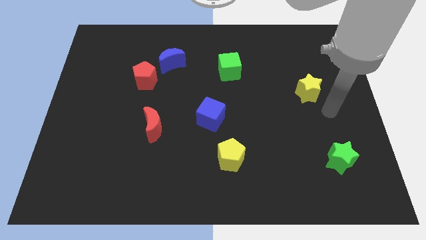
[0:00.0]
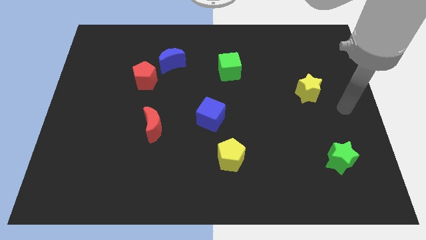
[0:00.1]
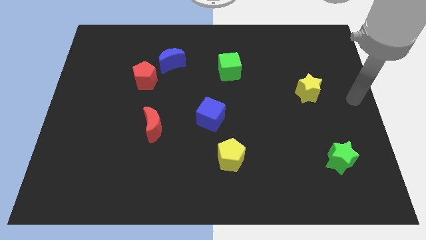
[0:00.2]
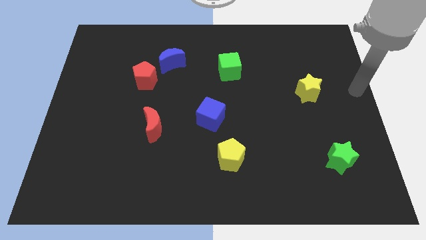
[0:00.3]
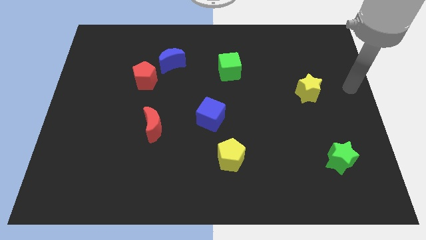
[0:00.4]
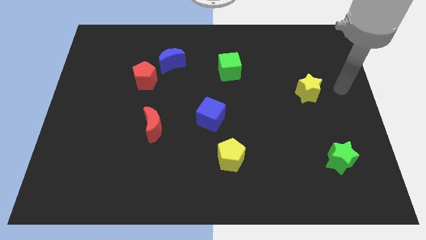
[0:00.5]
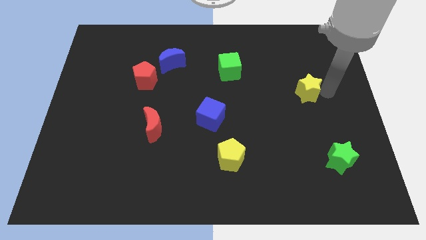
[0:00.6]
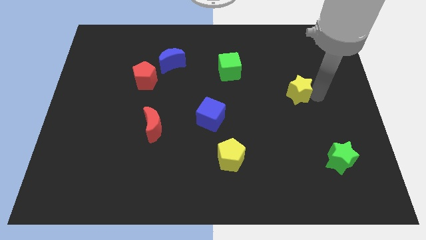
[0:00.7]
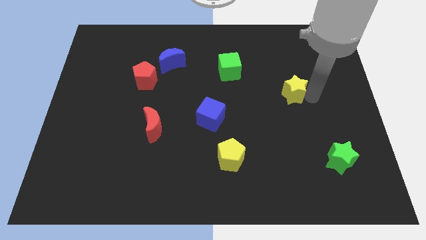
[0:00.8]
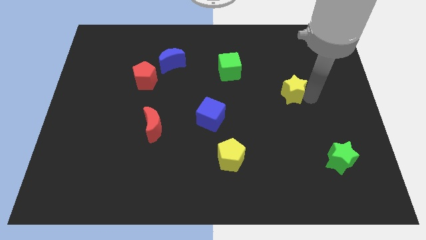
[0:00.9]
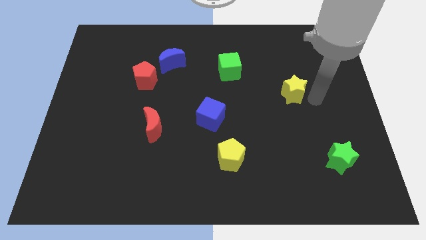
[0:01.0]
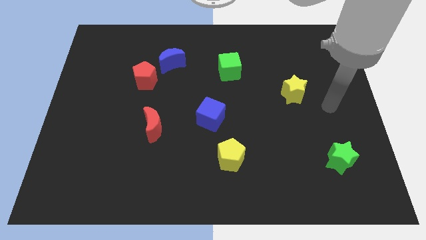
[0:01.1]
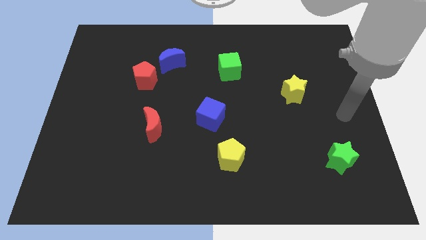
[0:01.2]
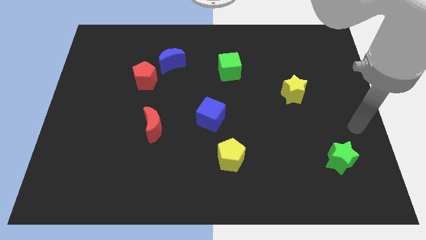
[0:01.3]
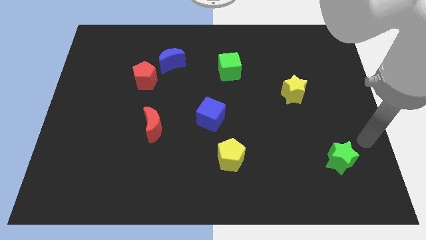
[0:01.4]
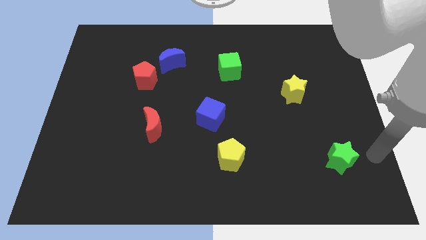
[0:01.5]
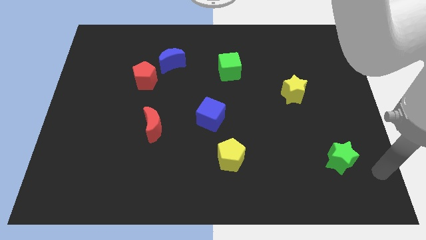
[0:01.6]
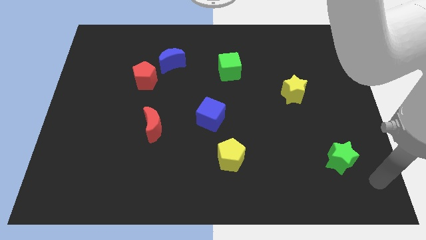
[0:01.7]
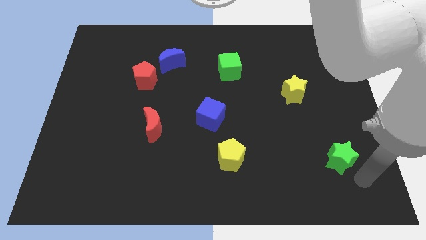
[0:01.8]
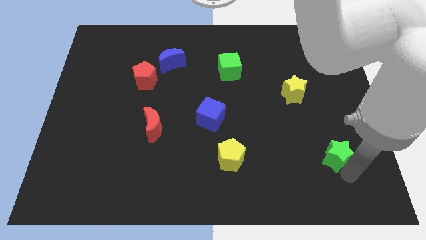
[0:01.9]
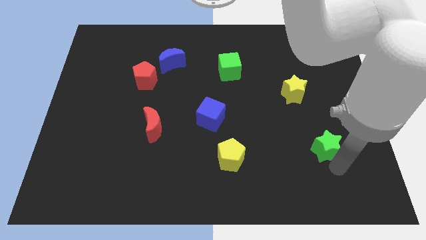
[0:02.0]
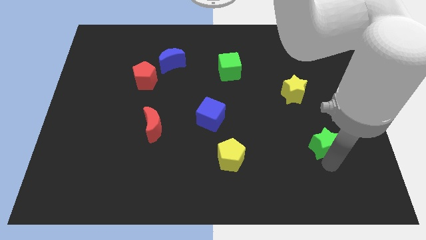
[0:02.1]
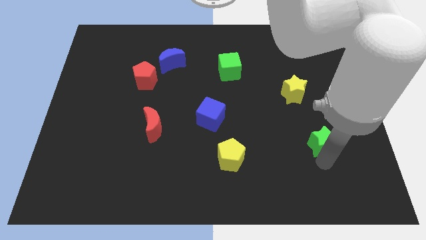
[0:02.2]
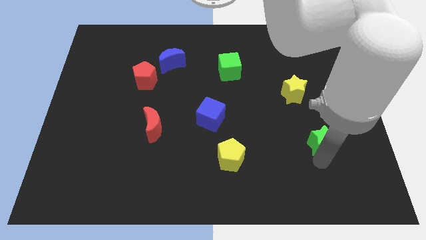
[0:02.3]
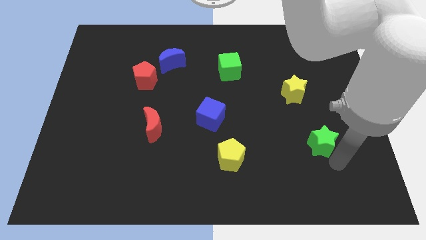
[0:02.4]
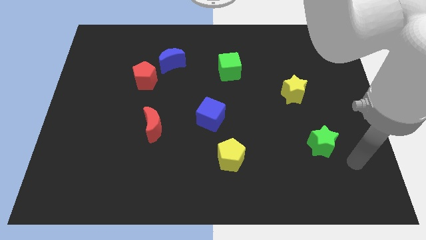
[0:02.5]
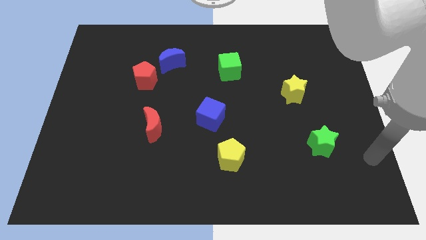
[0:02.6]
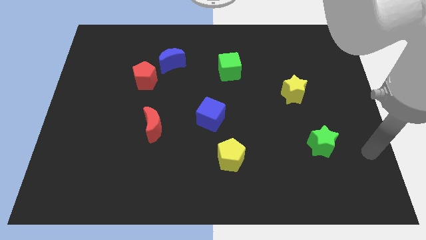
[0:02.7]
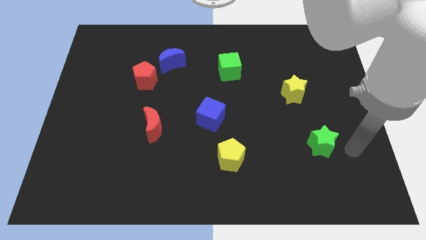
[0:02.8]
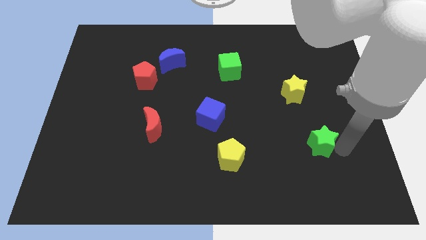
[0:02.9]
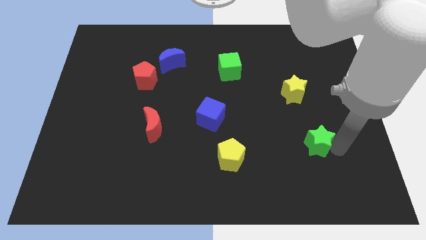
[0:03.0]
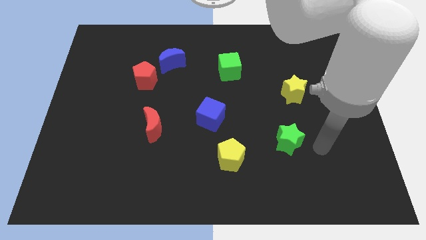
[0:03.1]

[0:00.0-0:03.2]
push green star below yellow star

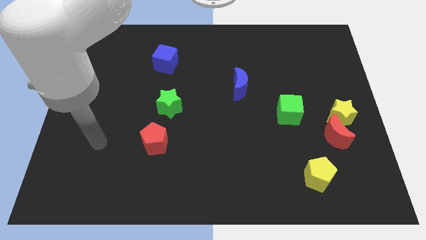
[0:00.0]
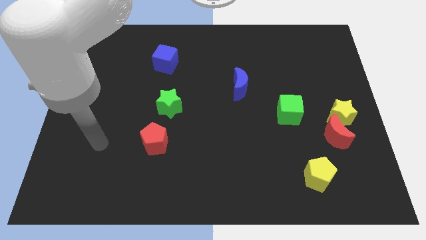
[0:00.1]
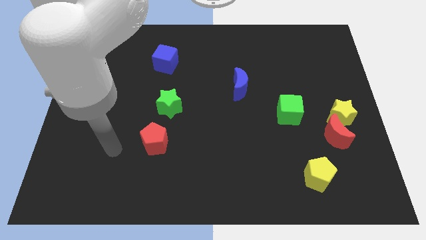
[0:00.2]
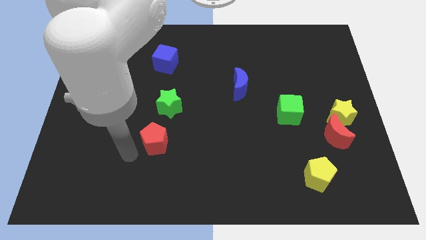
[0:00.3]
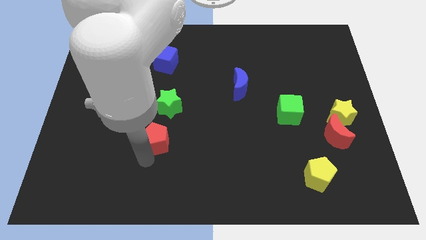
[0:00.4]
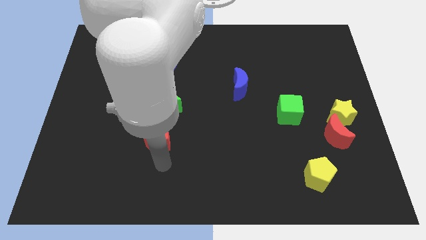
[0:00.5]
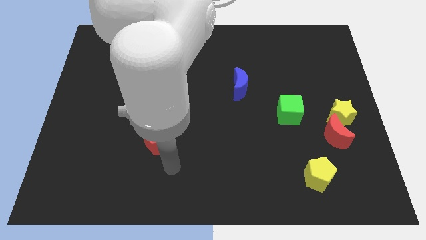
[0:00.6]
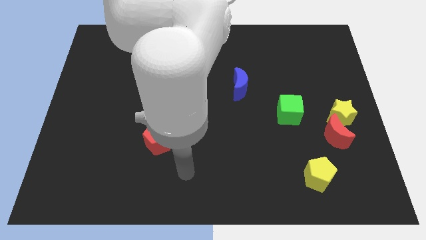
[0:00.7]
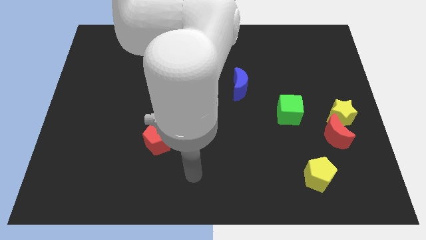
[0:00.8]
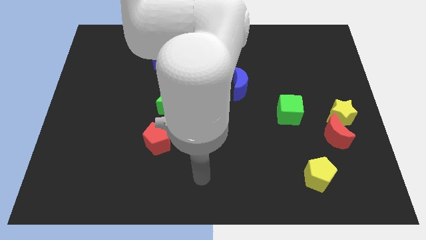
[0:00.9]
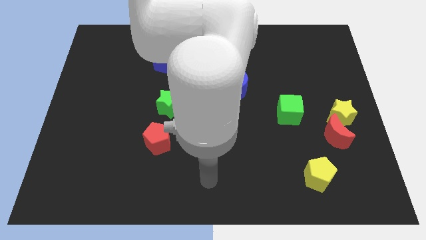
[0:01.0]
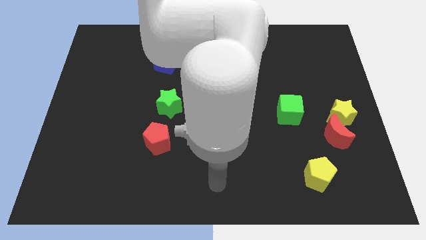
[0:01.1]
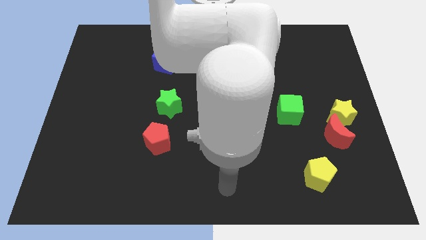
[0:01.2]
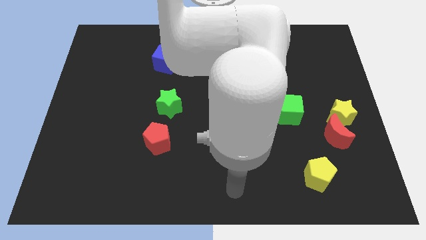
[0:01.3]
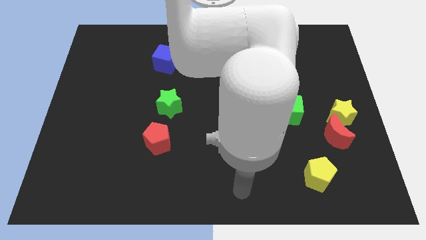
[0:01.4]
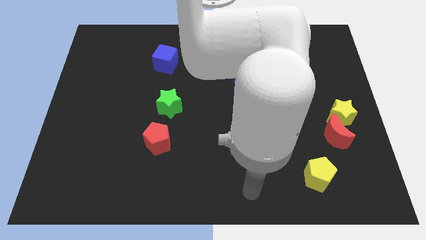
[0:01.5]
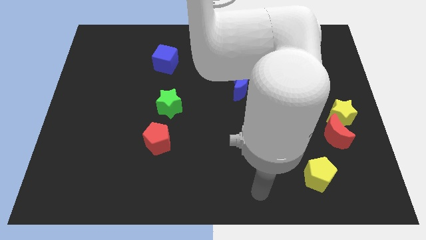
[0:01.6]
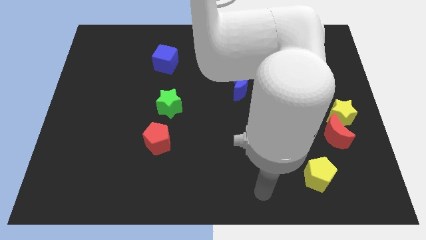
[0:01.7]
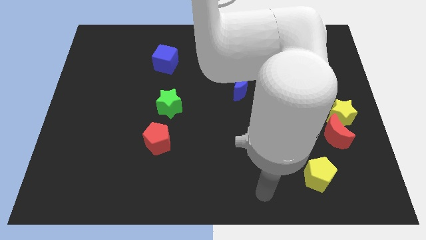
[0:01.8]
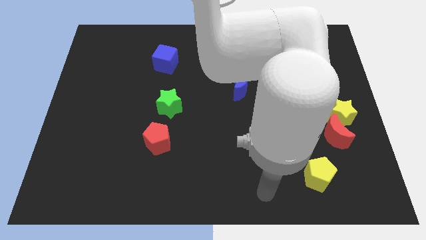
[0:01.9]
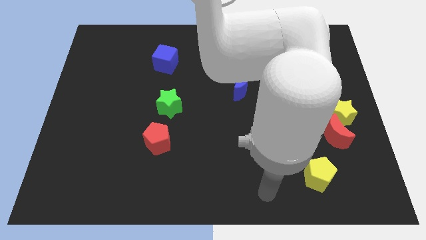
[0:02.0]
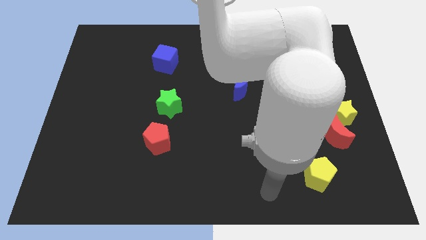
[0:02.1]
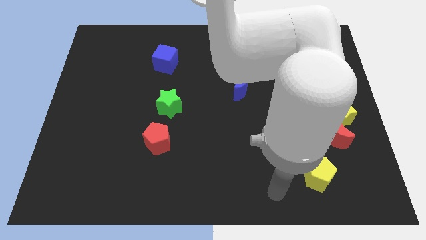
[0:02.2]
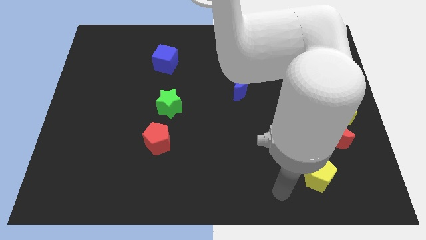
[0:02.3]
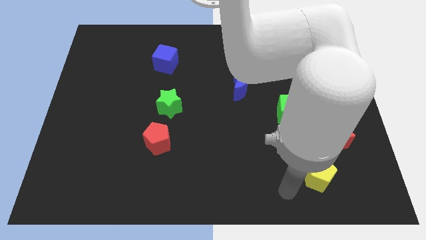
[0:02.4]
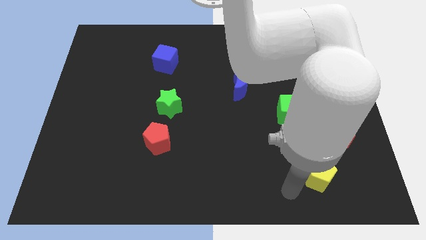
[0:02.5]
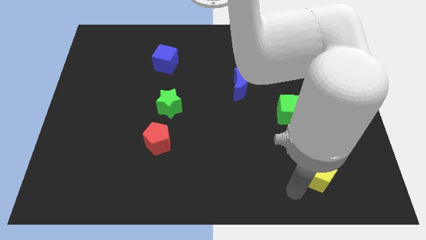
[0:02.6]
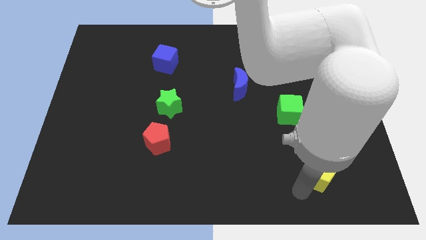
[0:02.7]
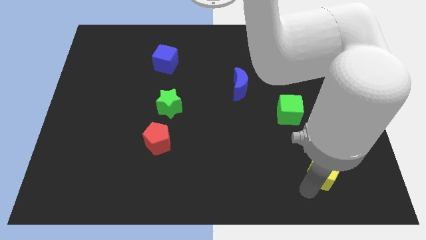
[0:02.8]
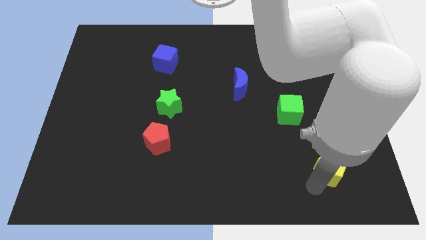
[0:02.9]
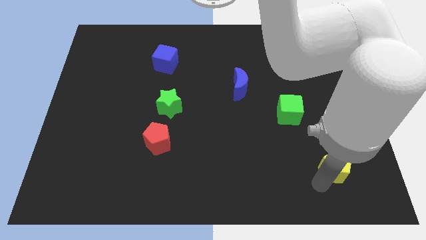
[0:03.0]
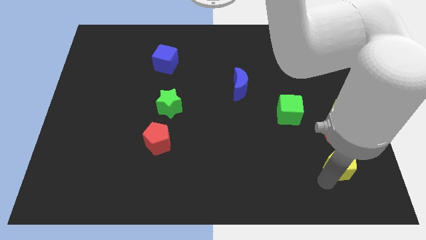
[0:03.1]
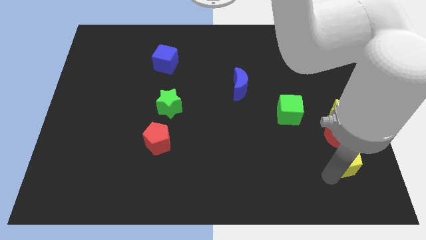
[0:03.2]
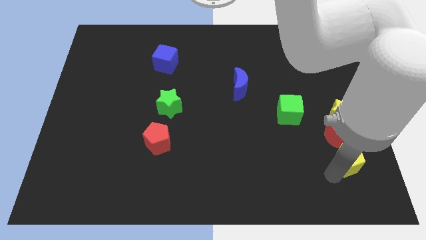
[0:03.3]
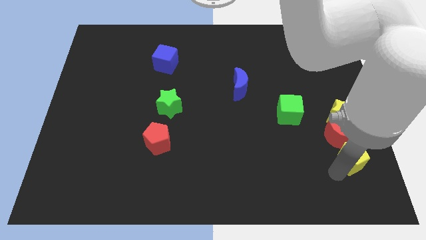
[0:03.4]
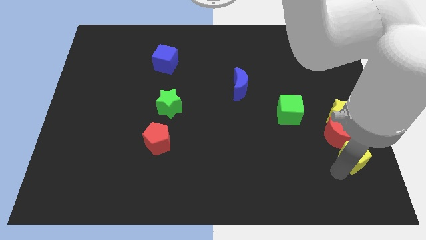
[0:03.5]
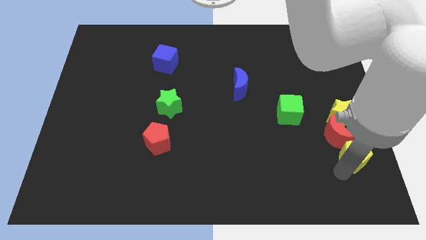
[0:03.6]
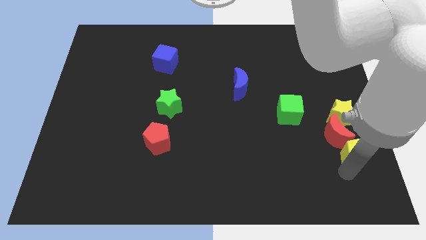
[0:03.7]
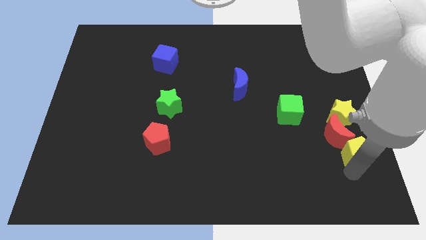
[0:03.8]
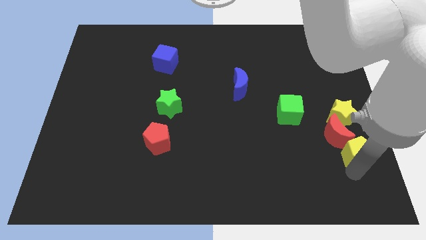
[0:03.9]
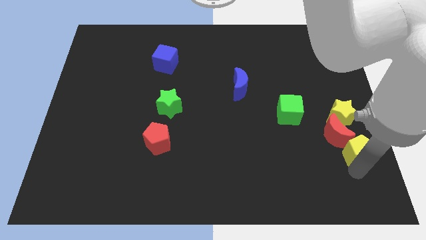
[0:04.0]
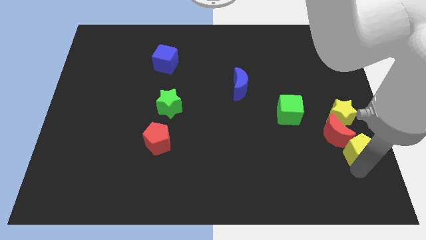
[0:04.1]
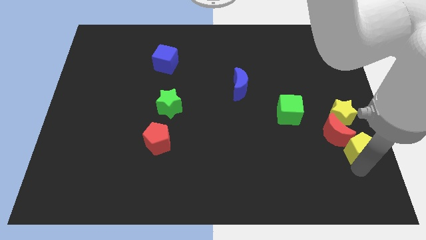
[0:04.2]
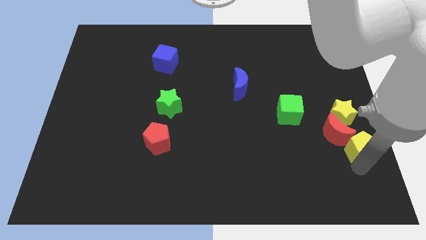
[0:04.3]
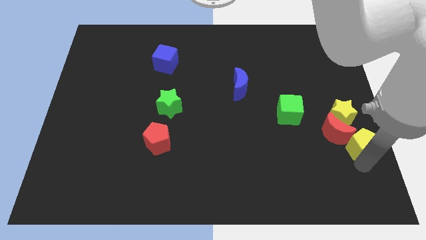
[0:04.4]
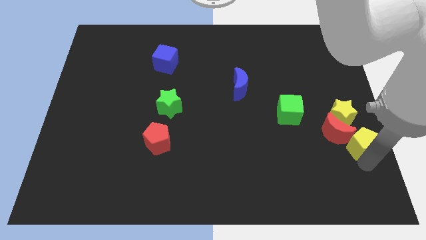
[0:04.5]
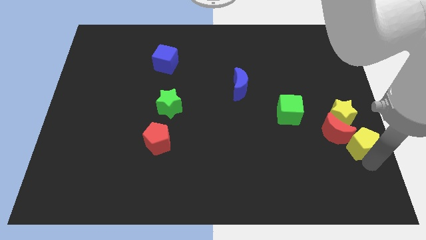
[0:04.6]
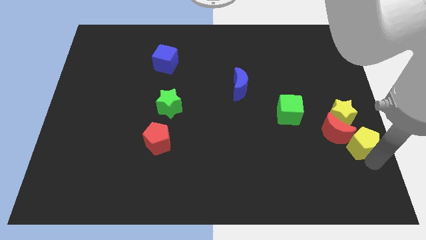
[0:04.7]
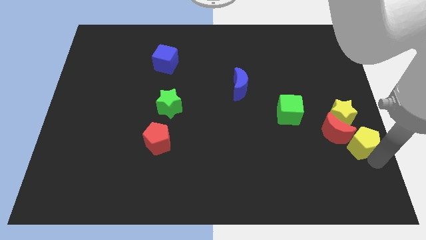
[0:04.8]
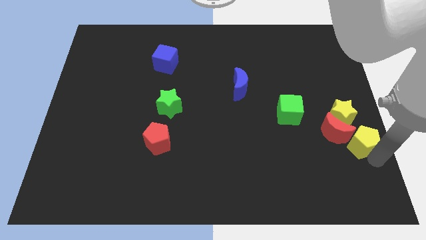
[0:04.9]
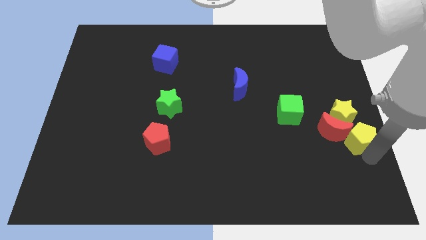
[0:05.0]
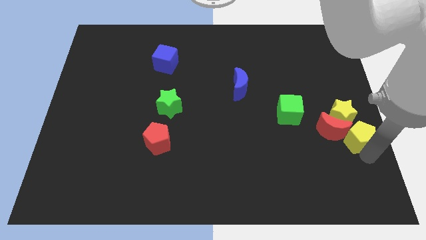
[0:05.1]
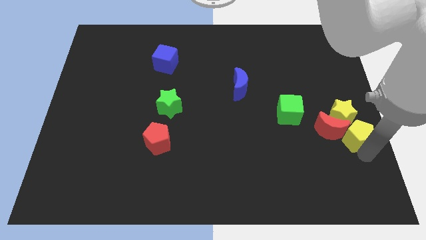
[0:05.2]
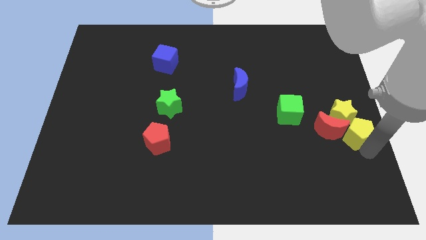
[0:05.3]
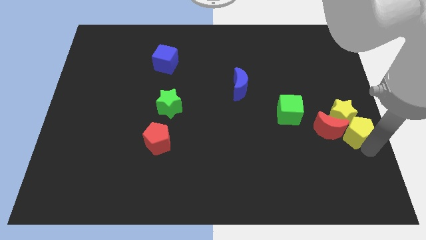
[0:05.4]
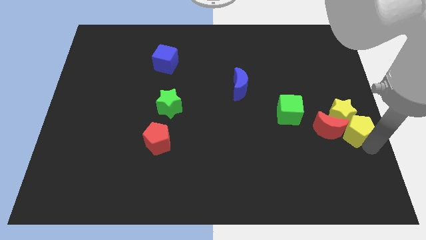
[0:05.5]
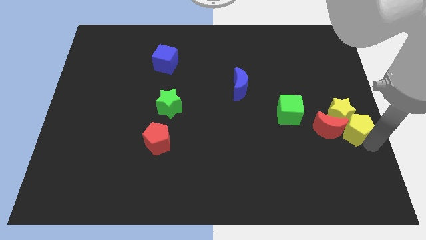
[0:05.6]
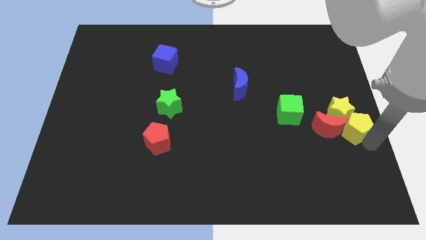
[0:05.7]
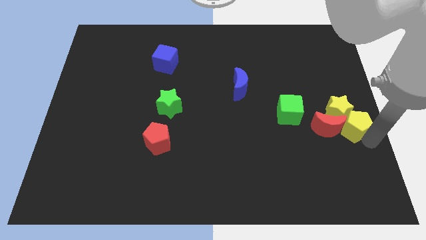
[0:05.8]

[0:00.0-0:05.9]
push the yellow pentagon into the yellow star
